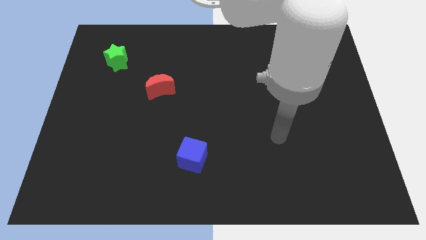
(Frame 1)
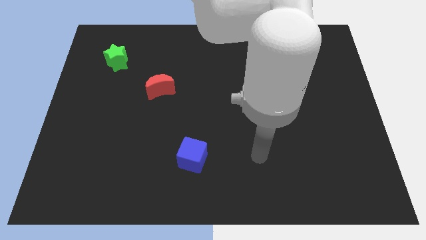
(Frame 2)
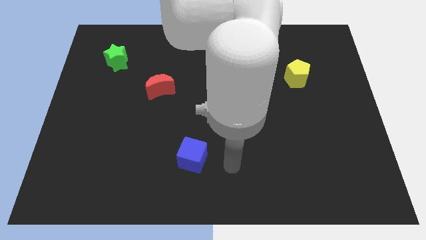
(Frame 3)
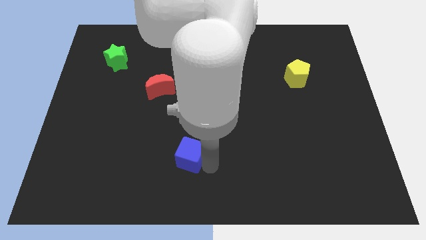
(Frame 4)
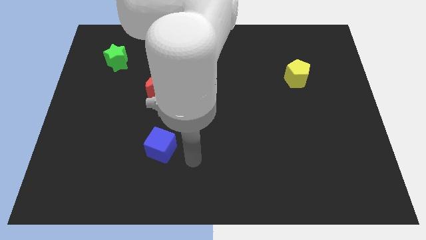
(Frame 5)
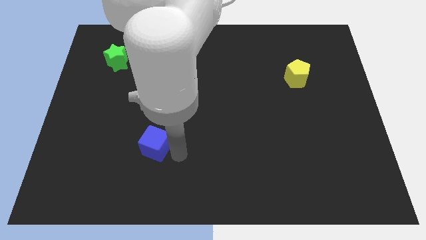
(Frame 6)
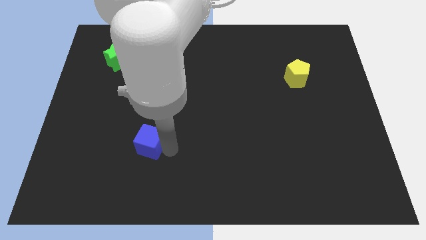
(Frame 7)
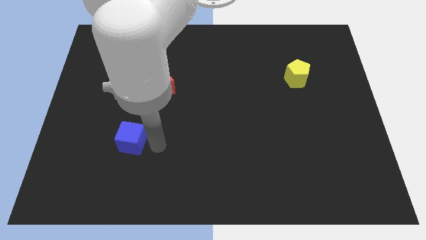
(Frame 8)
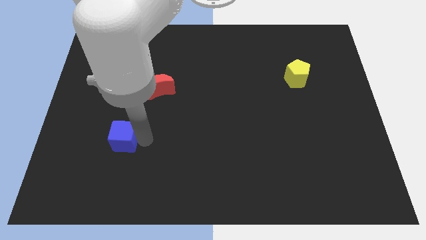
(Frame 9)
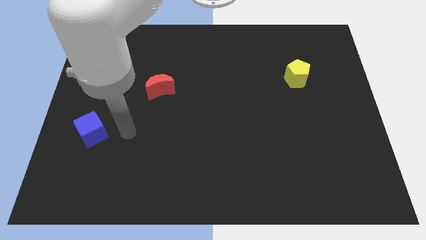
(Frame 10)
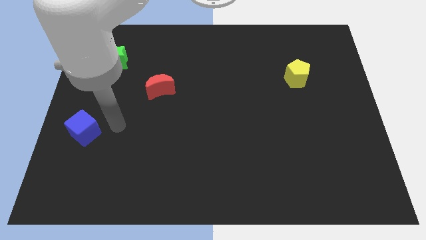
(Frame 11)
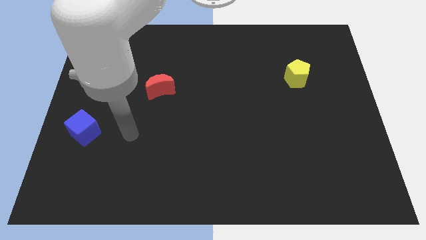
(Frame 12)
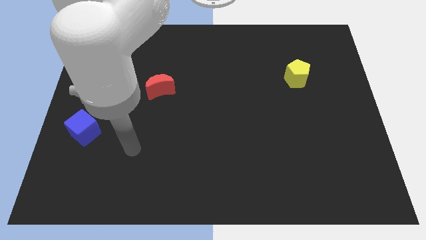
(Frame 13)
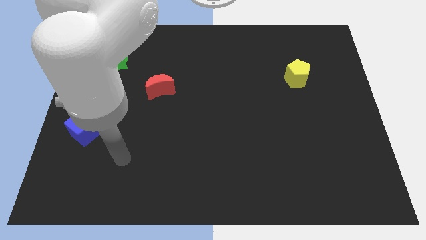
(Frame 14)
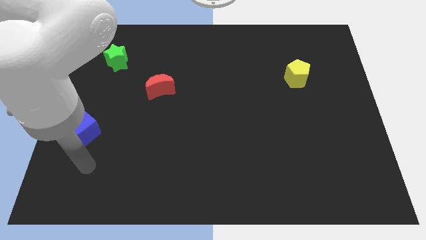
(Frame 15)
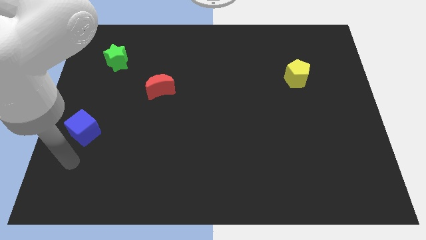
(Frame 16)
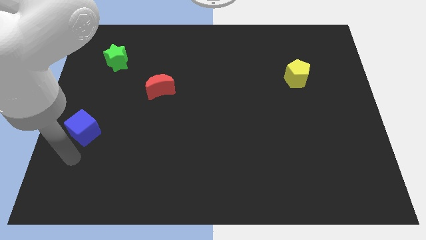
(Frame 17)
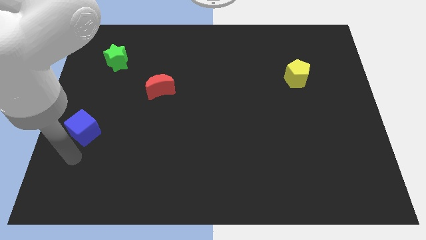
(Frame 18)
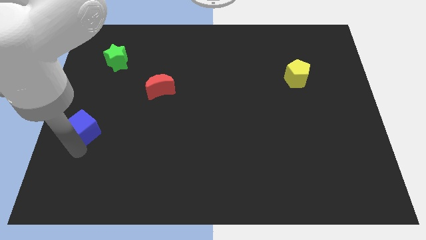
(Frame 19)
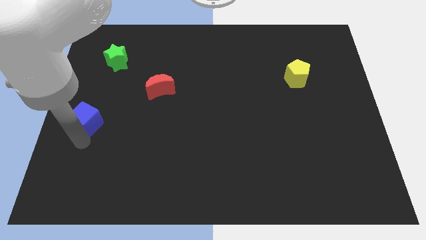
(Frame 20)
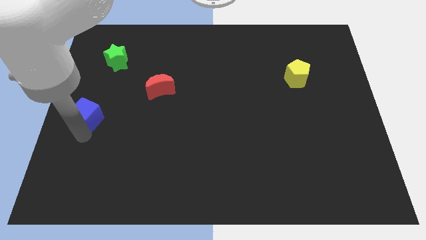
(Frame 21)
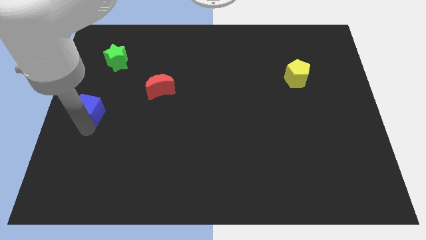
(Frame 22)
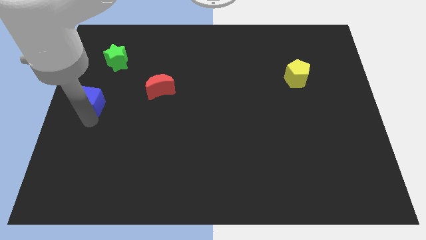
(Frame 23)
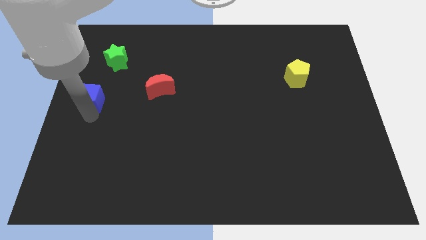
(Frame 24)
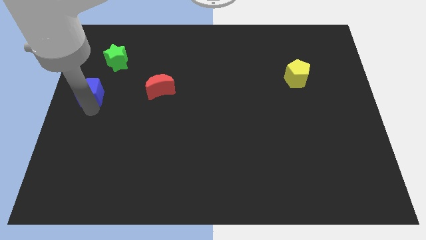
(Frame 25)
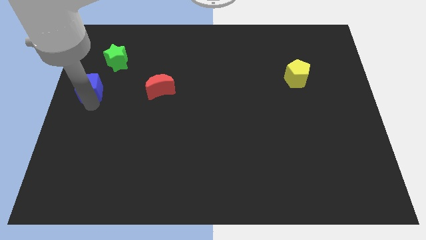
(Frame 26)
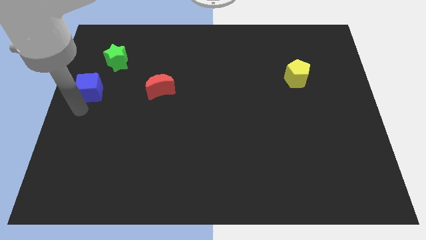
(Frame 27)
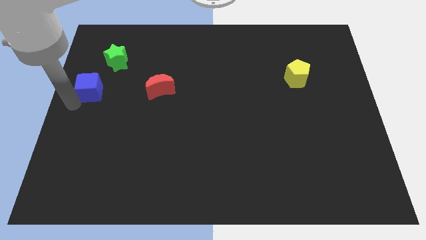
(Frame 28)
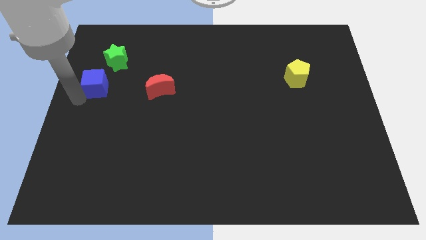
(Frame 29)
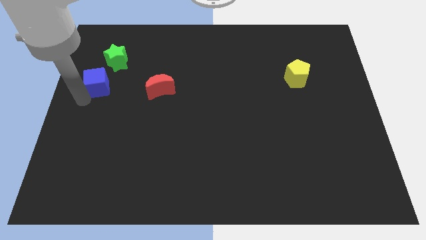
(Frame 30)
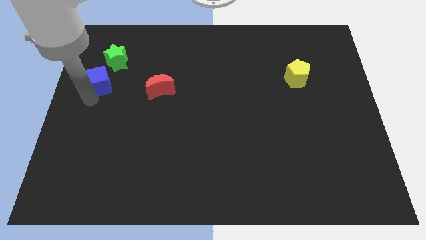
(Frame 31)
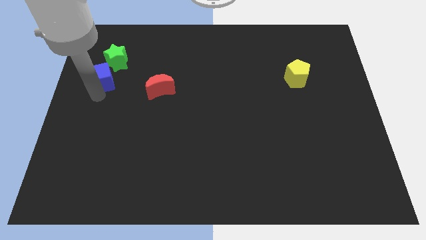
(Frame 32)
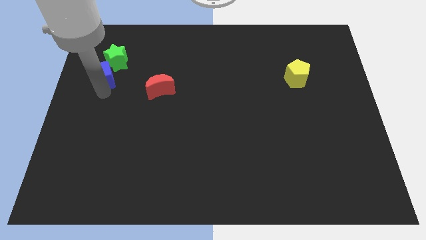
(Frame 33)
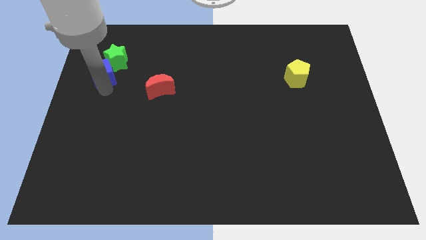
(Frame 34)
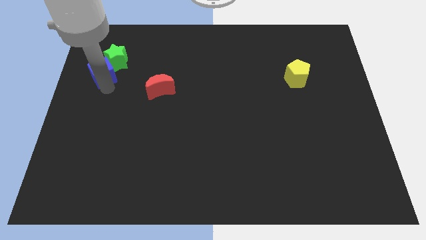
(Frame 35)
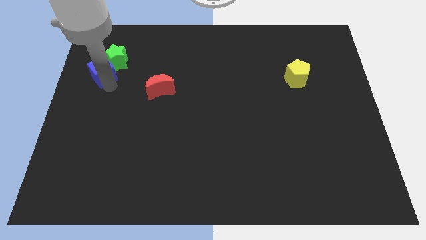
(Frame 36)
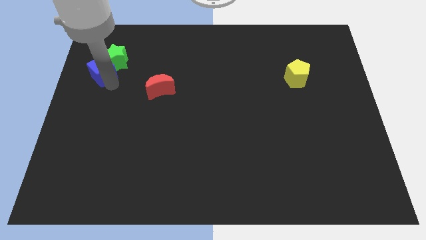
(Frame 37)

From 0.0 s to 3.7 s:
push the blue cube next to the green block

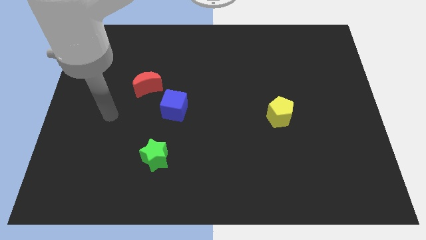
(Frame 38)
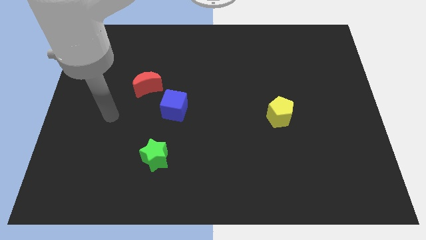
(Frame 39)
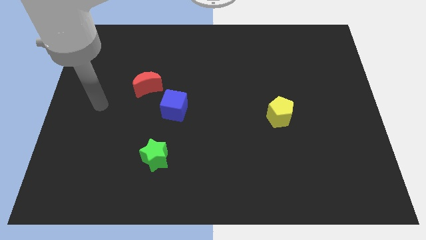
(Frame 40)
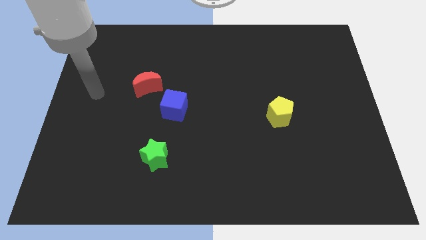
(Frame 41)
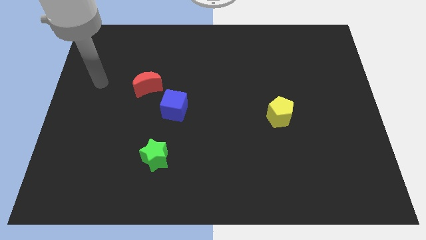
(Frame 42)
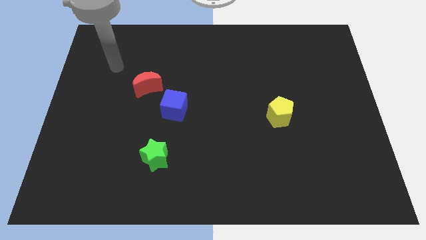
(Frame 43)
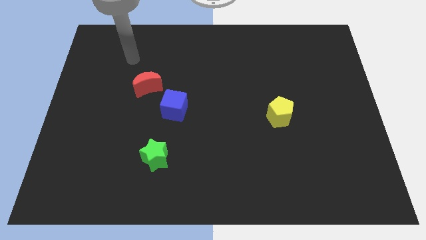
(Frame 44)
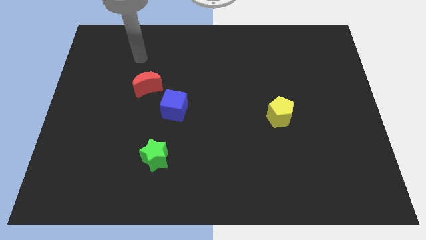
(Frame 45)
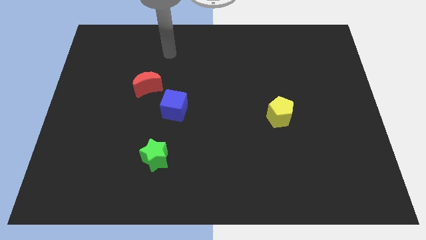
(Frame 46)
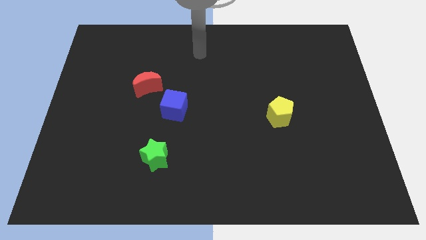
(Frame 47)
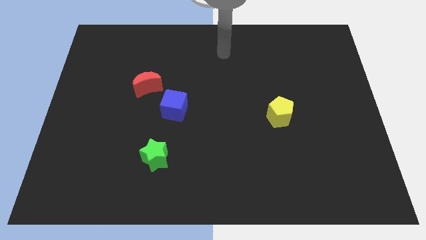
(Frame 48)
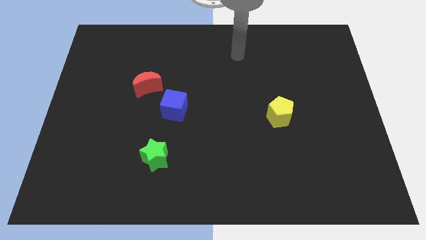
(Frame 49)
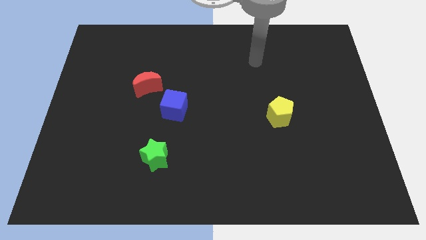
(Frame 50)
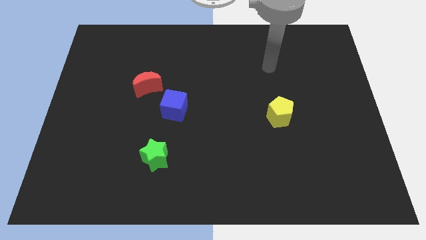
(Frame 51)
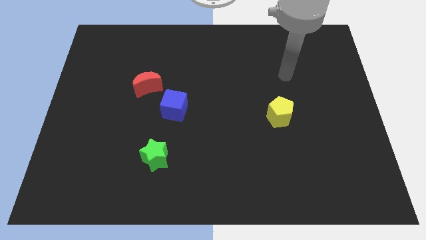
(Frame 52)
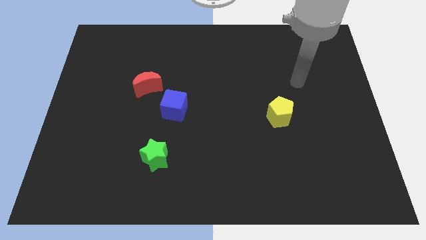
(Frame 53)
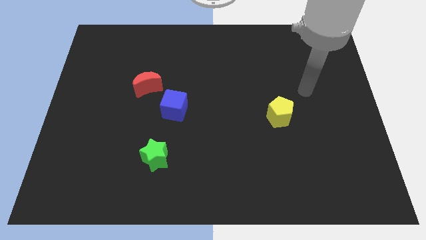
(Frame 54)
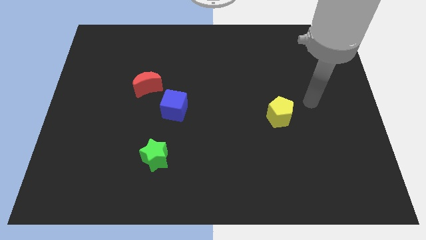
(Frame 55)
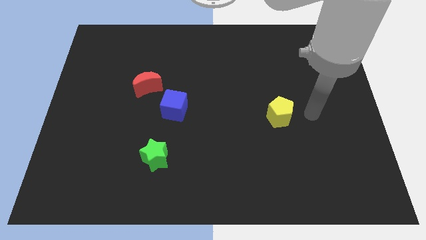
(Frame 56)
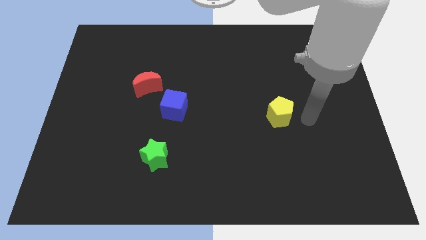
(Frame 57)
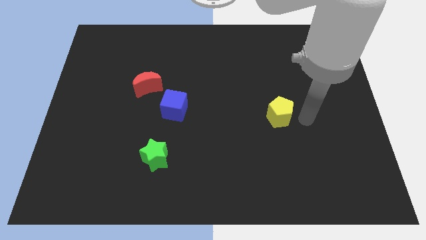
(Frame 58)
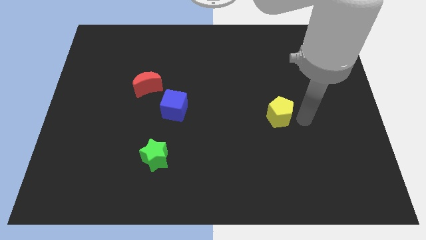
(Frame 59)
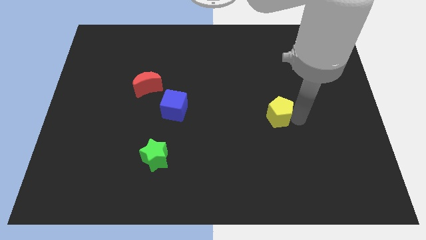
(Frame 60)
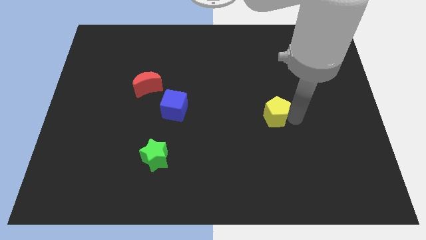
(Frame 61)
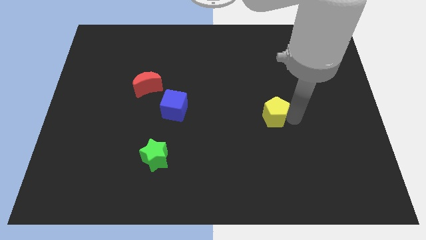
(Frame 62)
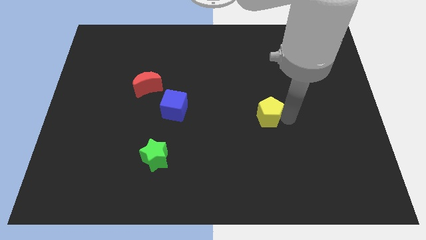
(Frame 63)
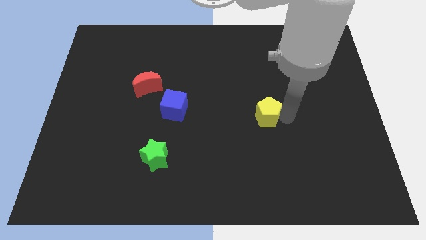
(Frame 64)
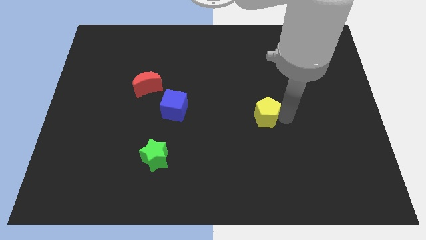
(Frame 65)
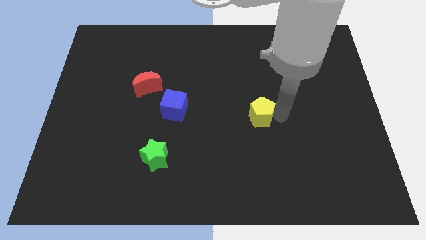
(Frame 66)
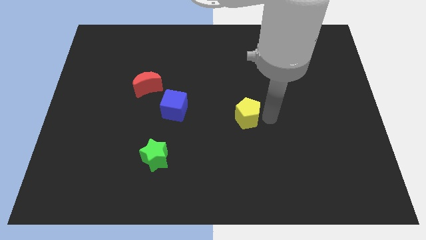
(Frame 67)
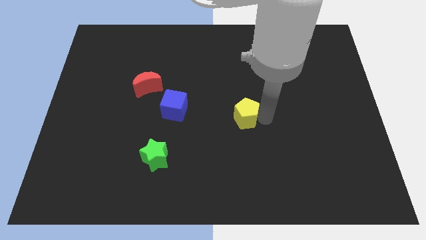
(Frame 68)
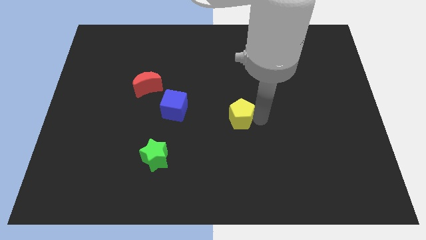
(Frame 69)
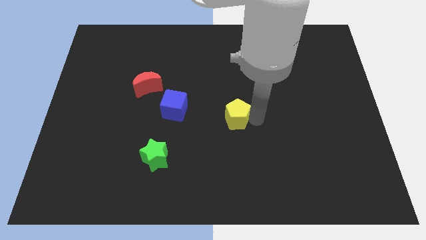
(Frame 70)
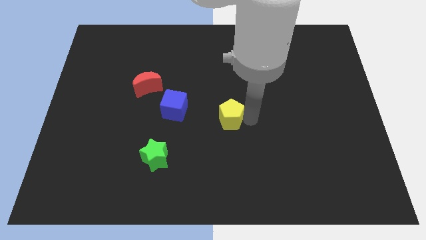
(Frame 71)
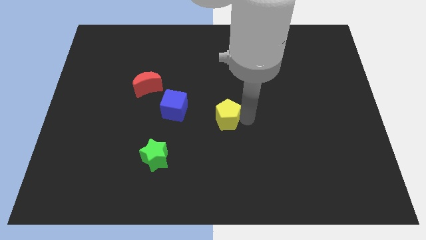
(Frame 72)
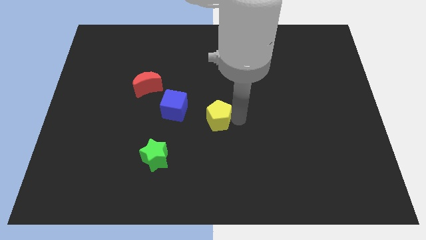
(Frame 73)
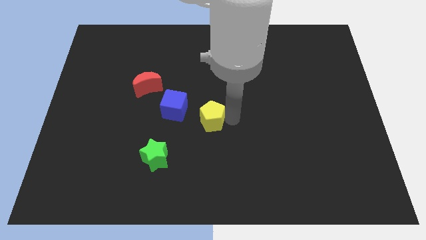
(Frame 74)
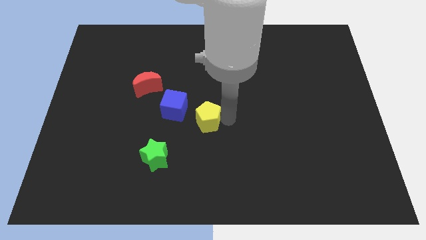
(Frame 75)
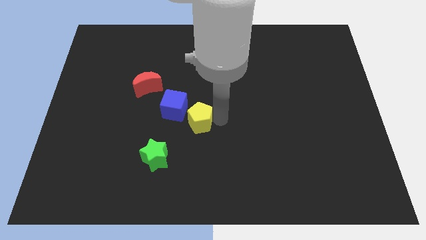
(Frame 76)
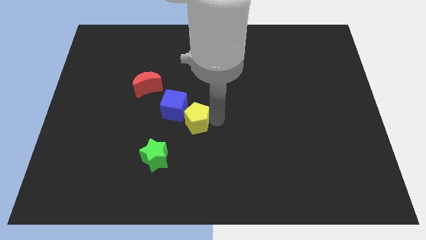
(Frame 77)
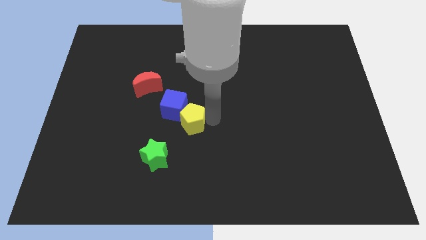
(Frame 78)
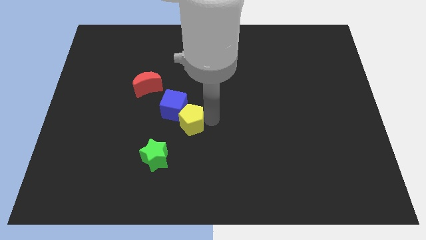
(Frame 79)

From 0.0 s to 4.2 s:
move the yellow pentagon towards the blue cube

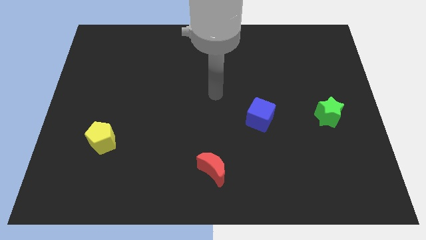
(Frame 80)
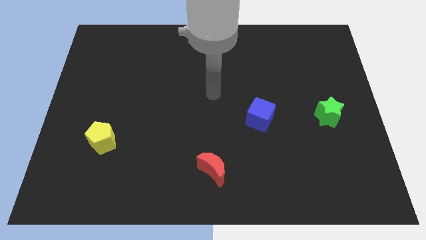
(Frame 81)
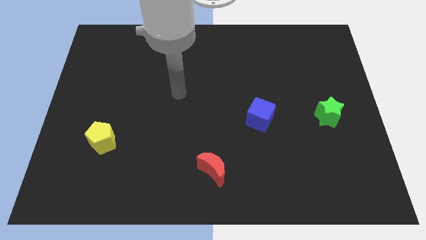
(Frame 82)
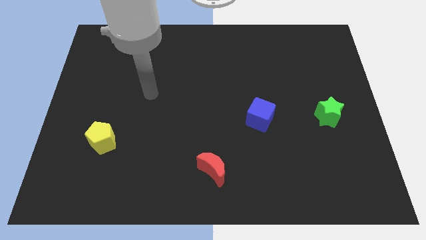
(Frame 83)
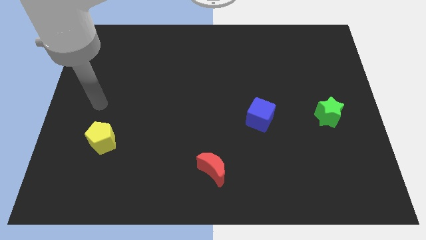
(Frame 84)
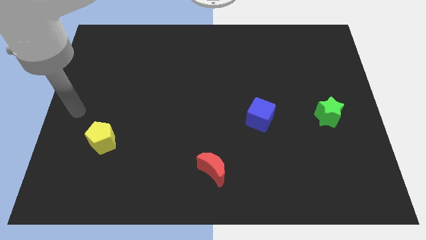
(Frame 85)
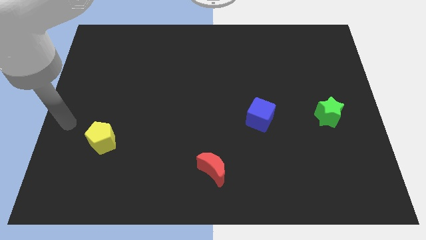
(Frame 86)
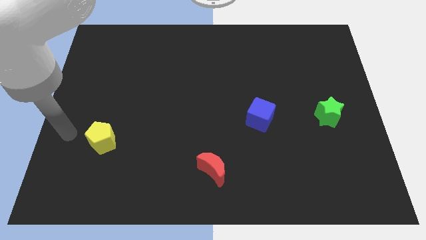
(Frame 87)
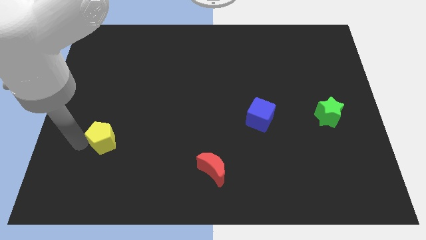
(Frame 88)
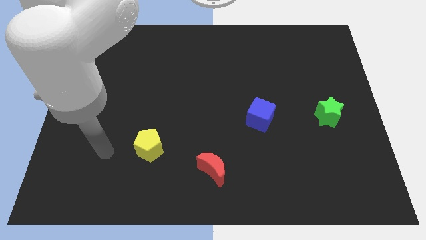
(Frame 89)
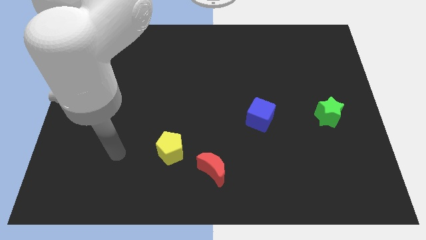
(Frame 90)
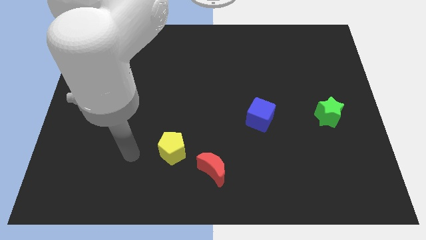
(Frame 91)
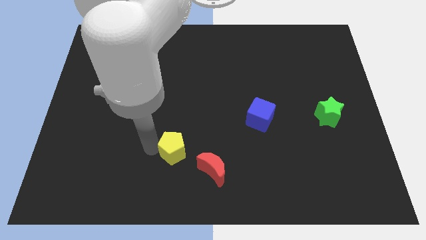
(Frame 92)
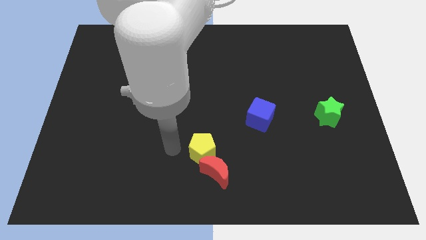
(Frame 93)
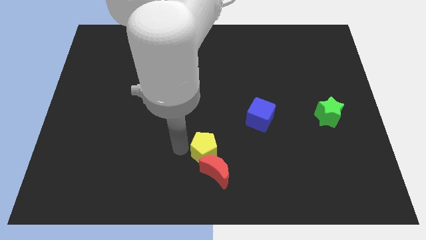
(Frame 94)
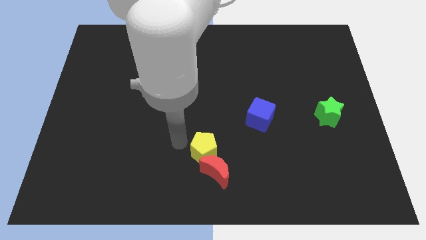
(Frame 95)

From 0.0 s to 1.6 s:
push the pentagon to the red block
